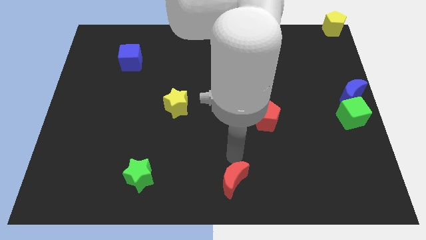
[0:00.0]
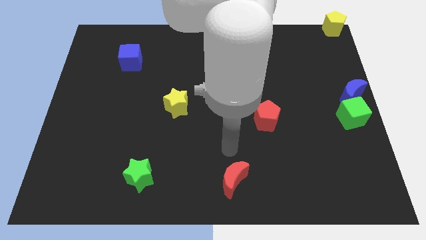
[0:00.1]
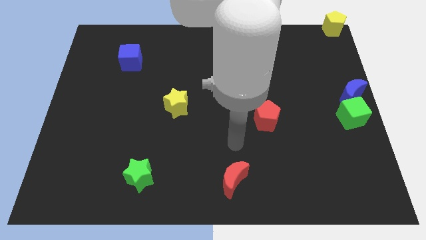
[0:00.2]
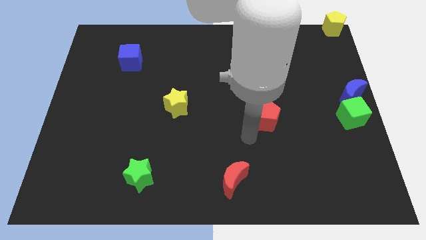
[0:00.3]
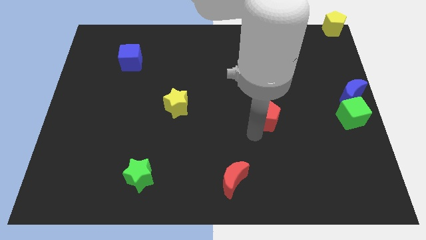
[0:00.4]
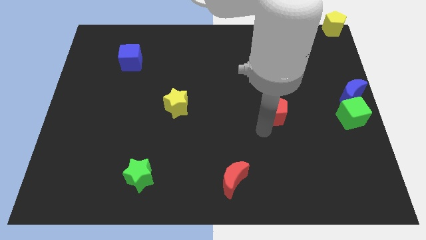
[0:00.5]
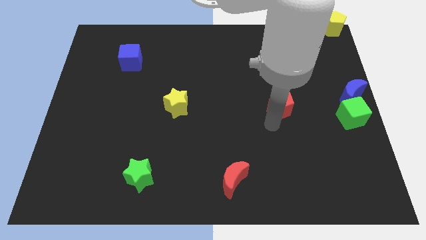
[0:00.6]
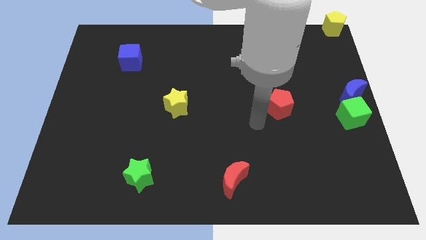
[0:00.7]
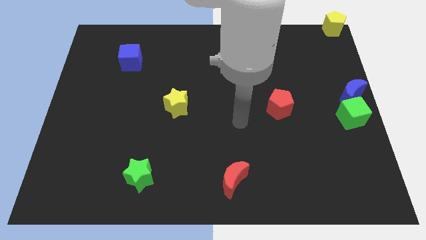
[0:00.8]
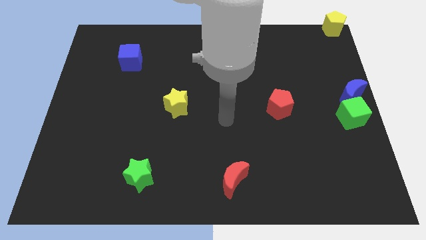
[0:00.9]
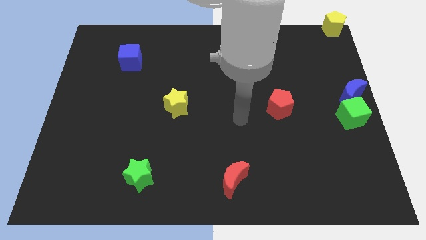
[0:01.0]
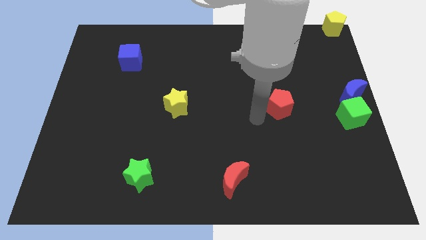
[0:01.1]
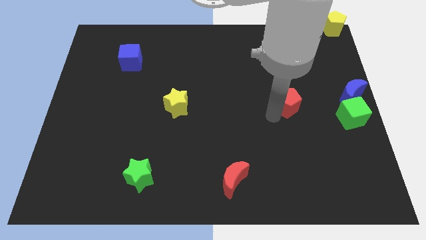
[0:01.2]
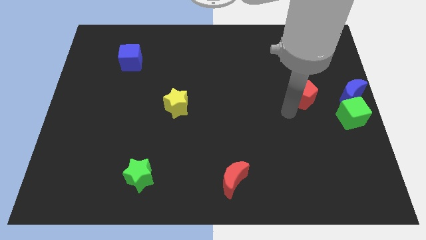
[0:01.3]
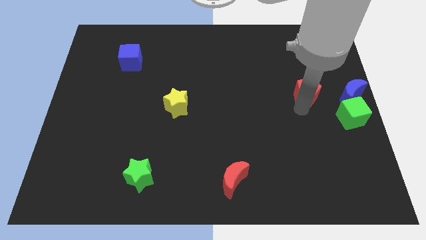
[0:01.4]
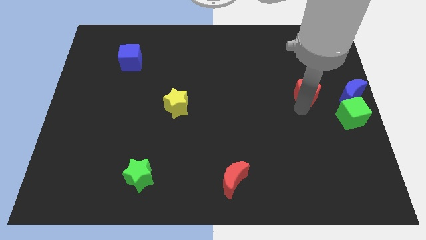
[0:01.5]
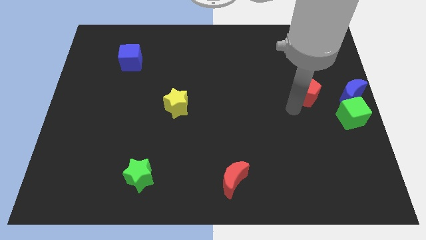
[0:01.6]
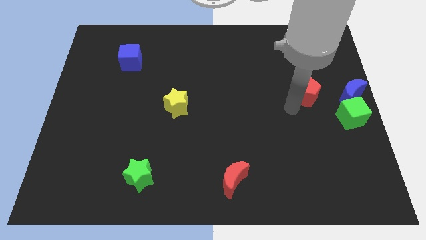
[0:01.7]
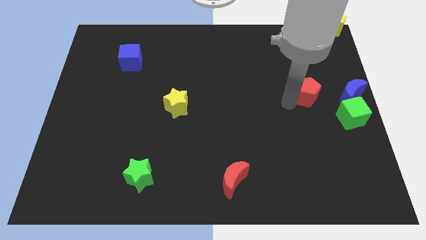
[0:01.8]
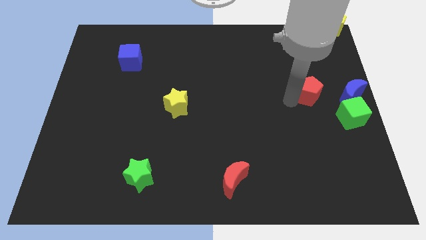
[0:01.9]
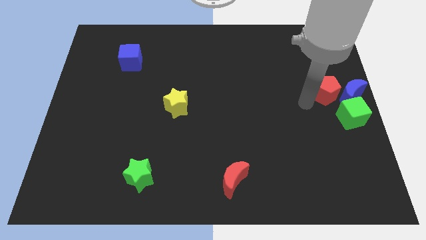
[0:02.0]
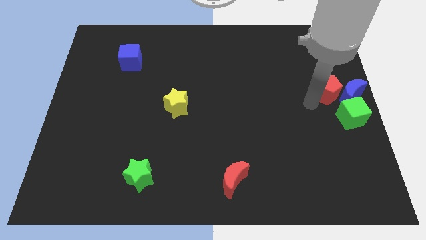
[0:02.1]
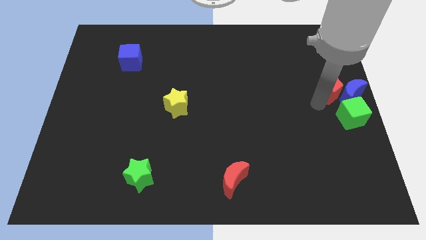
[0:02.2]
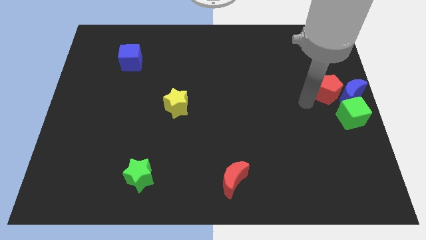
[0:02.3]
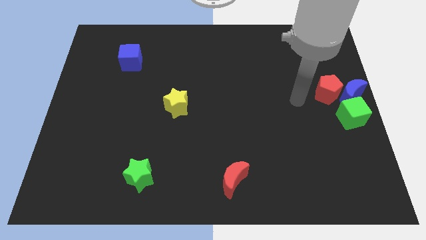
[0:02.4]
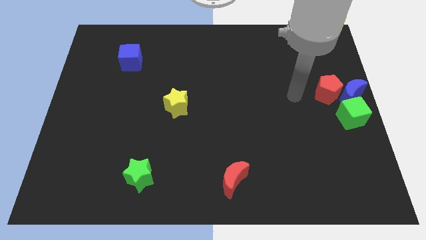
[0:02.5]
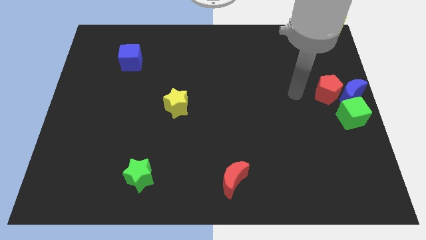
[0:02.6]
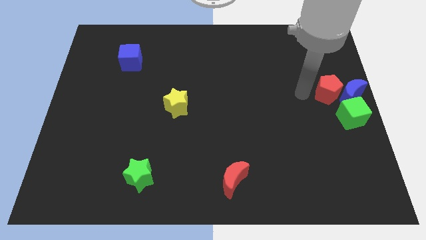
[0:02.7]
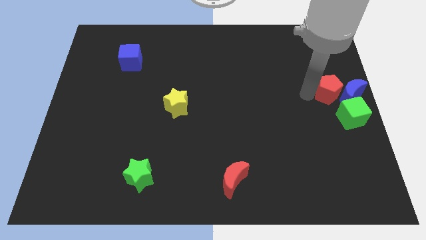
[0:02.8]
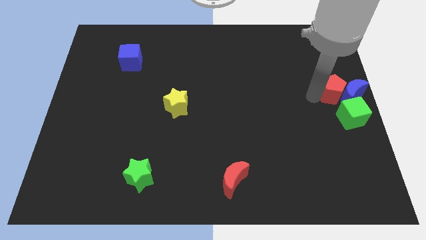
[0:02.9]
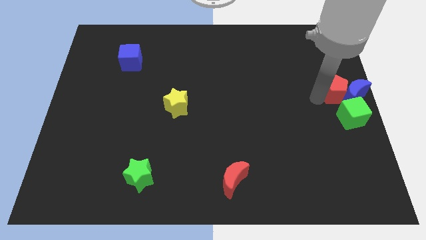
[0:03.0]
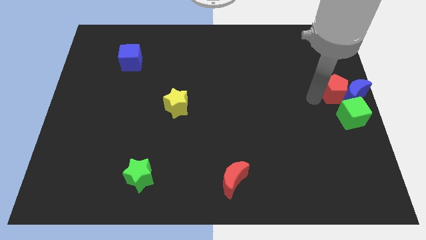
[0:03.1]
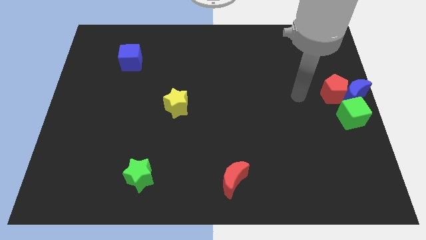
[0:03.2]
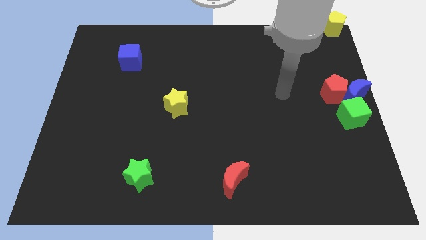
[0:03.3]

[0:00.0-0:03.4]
push the red pentagon to the left side of the blue moon

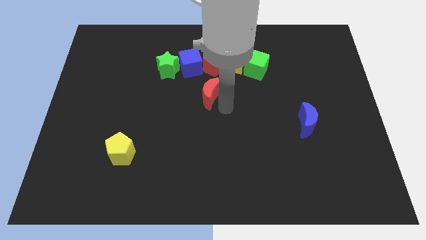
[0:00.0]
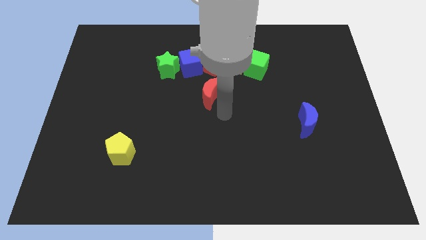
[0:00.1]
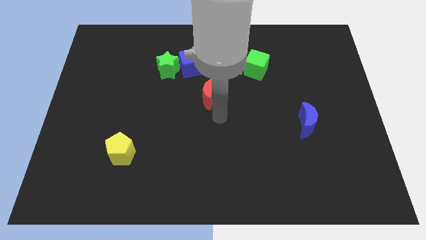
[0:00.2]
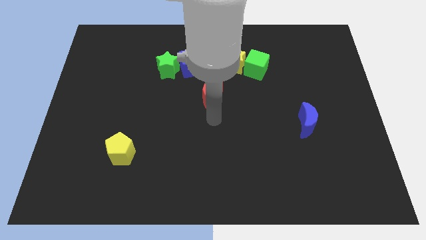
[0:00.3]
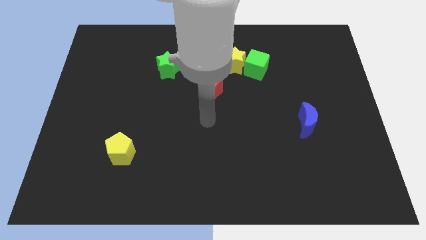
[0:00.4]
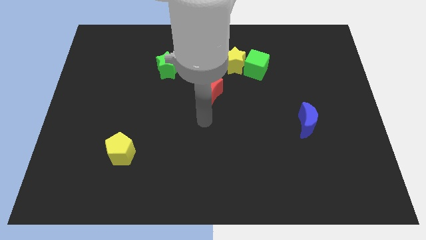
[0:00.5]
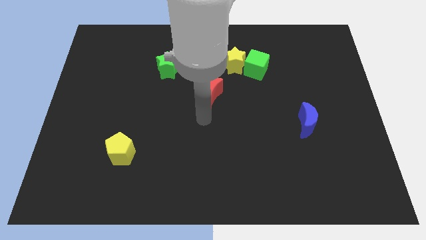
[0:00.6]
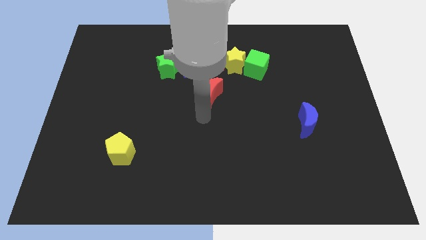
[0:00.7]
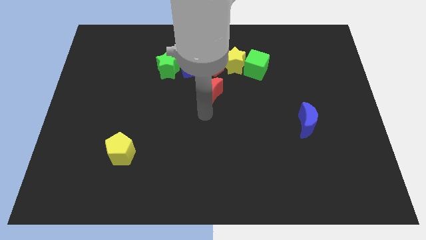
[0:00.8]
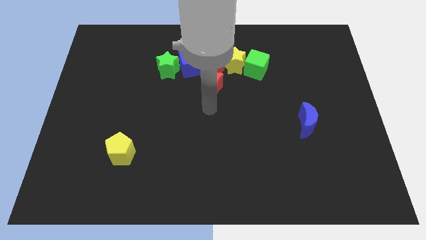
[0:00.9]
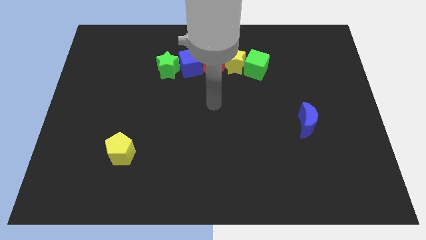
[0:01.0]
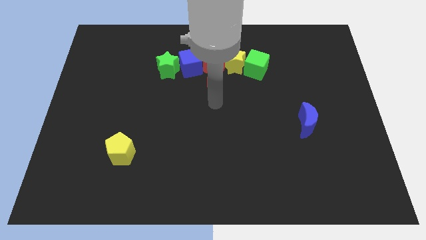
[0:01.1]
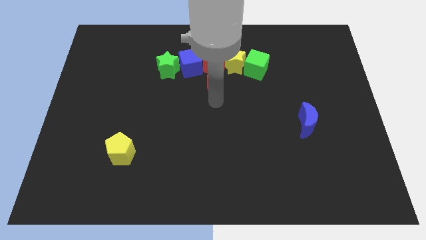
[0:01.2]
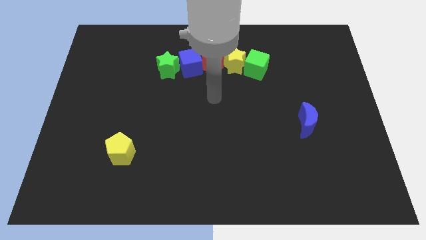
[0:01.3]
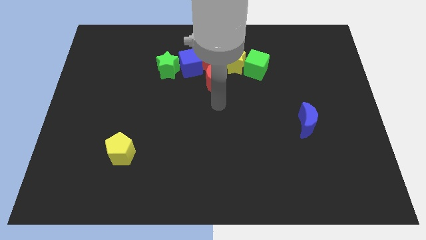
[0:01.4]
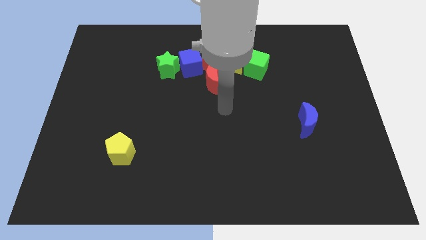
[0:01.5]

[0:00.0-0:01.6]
place red crescent on the bottom side of the red pentagon

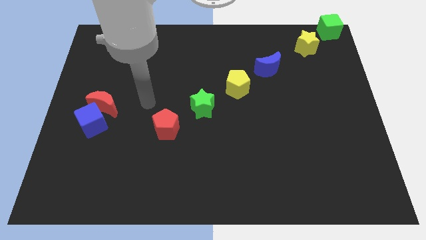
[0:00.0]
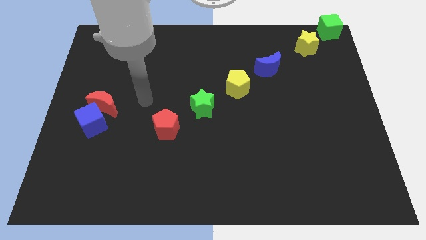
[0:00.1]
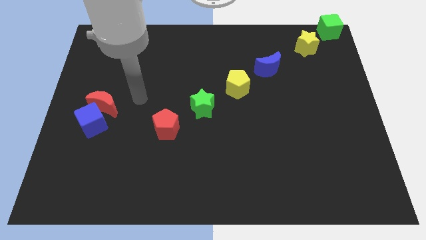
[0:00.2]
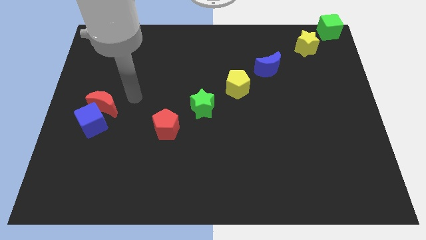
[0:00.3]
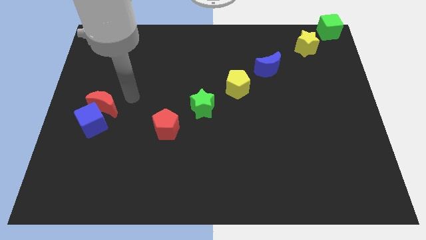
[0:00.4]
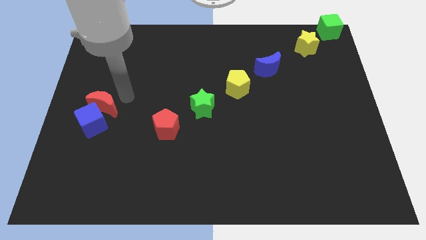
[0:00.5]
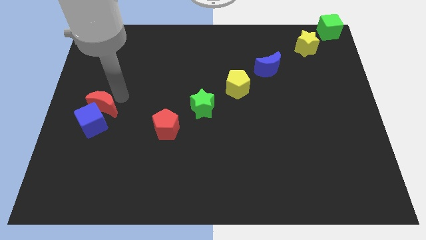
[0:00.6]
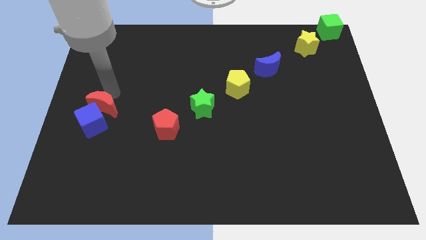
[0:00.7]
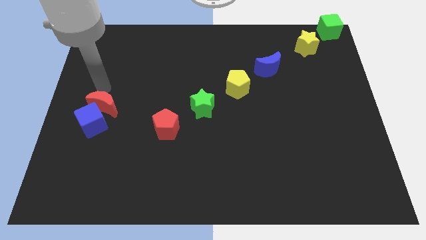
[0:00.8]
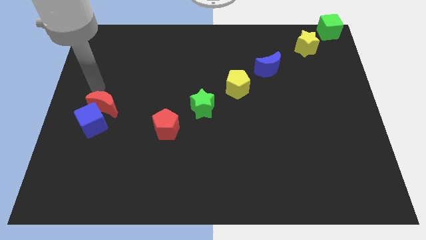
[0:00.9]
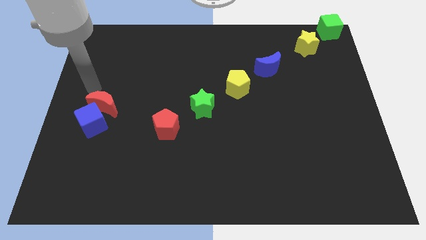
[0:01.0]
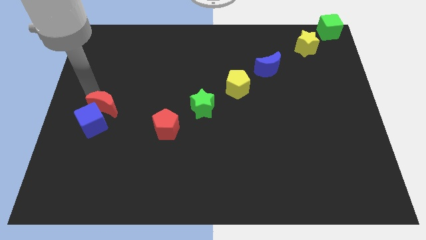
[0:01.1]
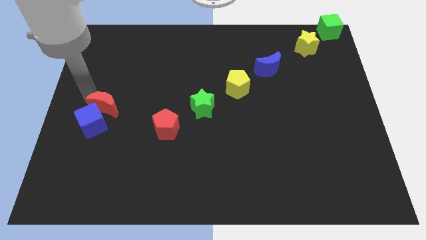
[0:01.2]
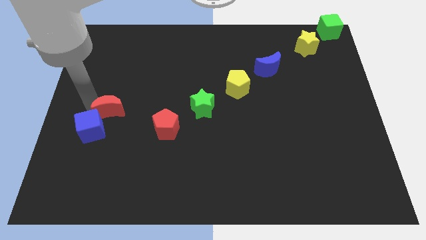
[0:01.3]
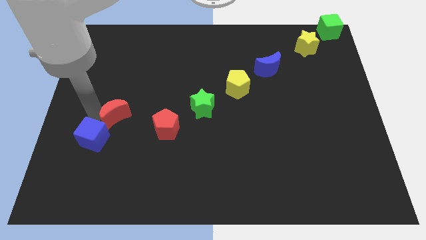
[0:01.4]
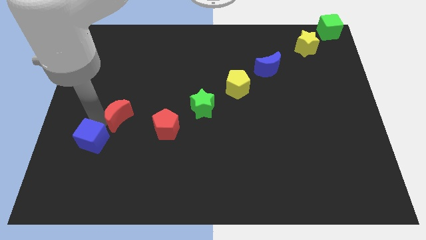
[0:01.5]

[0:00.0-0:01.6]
move your arm into the red crescent

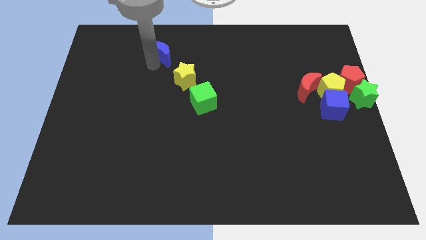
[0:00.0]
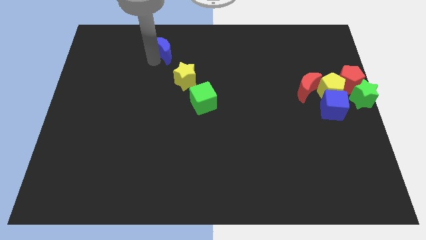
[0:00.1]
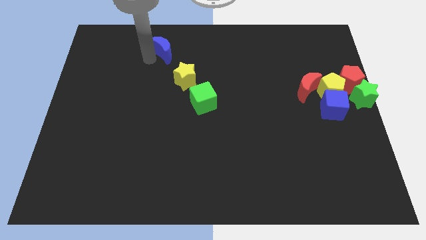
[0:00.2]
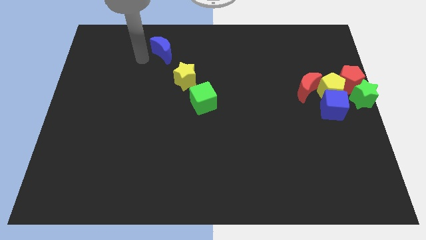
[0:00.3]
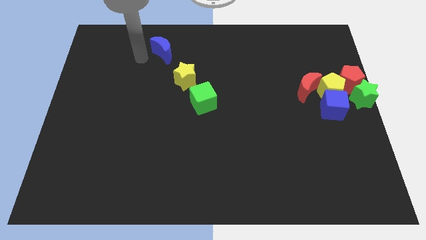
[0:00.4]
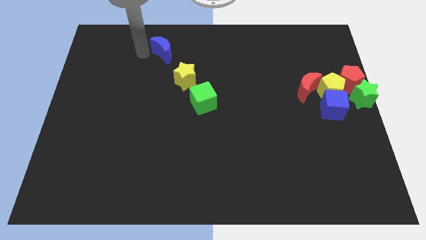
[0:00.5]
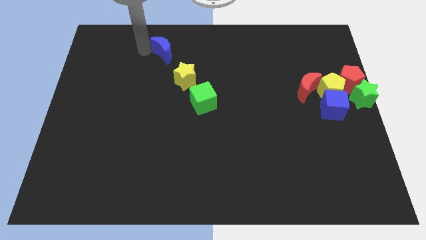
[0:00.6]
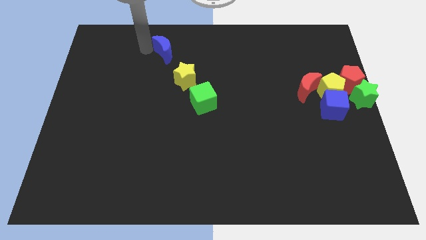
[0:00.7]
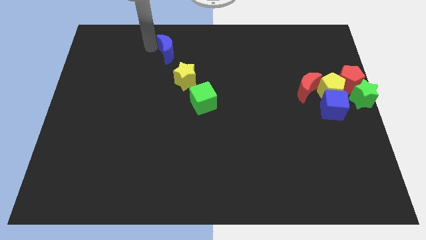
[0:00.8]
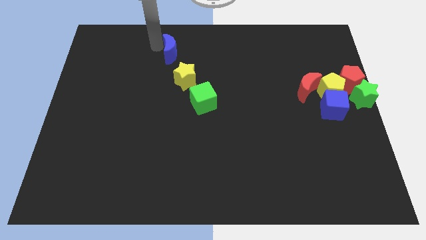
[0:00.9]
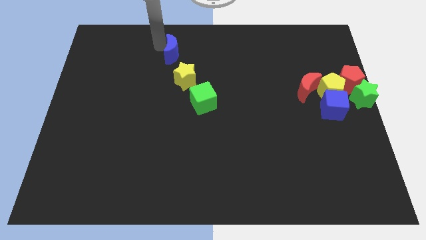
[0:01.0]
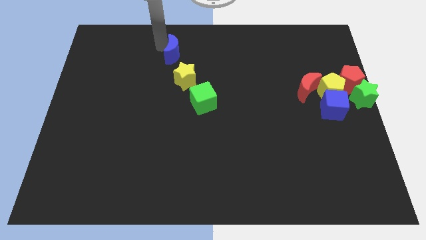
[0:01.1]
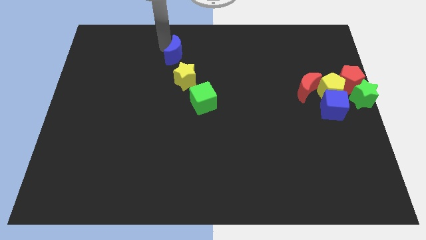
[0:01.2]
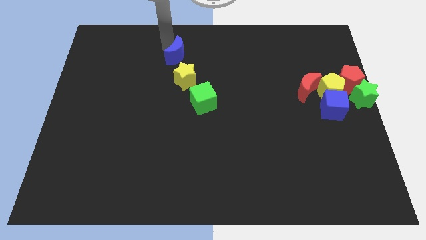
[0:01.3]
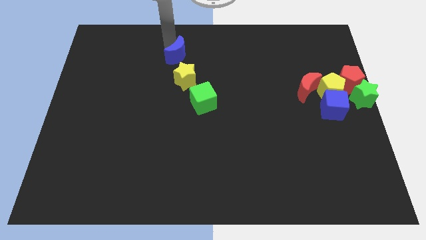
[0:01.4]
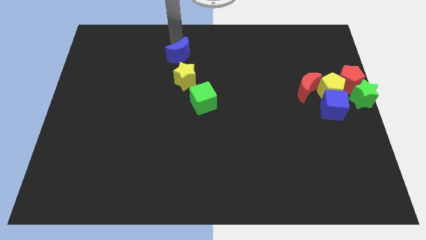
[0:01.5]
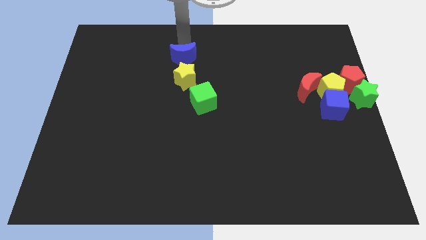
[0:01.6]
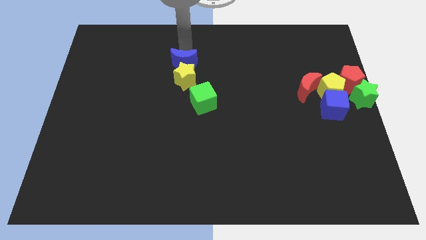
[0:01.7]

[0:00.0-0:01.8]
place the blue moon above the yellow star

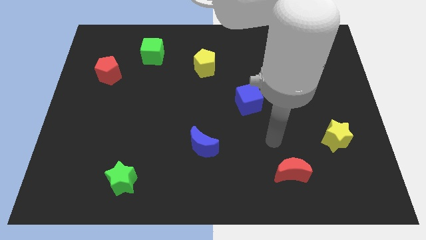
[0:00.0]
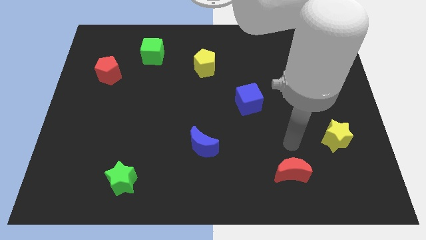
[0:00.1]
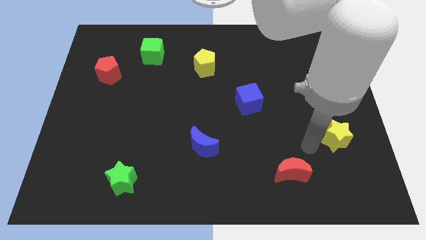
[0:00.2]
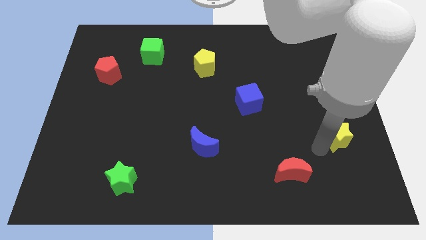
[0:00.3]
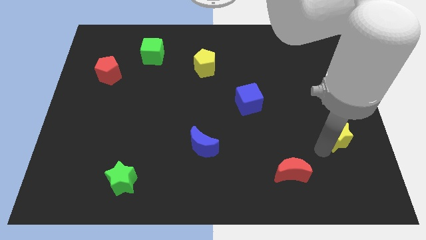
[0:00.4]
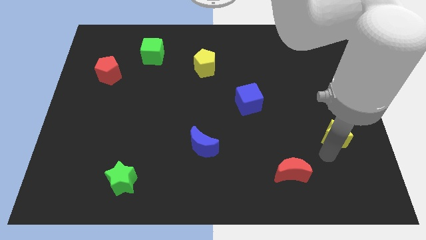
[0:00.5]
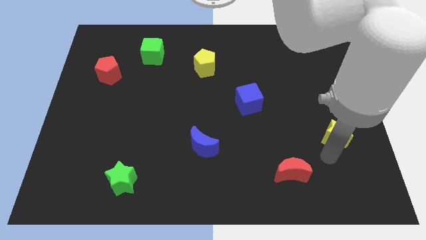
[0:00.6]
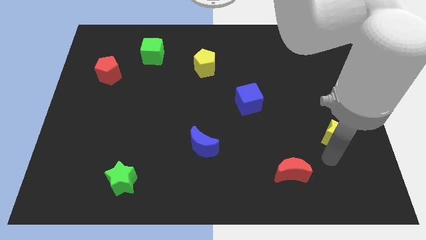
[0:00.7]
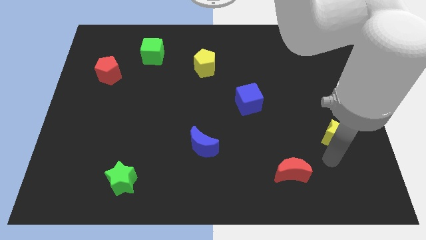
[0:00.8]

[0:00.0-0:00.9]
point your arm below yellow star
